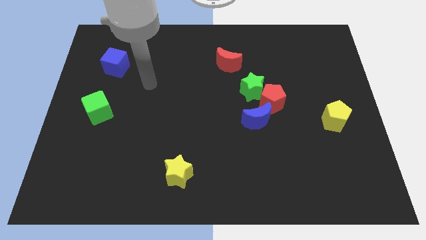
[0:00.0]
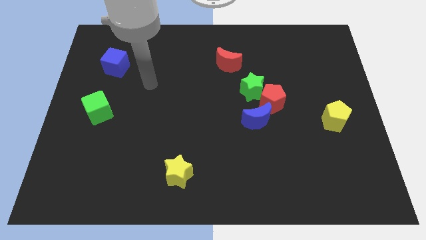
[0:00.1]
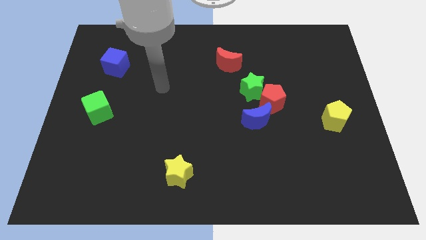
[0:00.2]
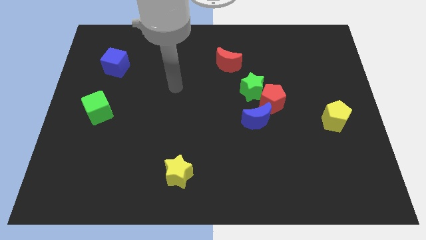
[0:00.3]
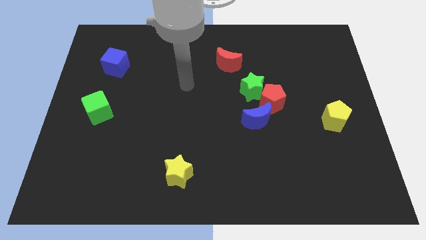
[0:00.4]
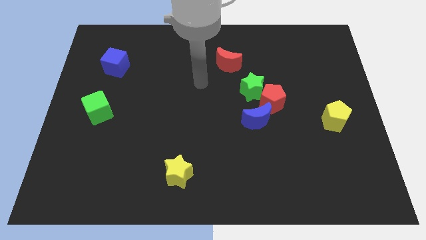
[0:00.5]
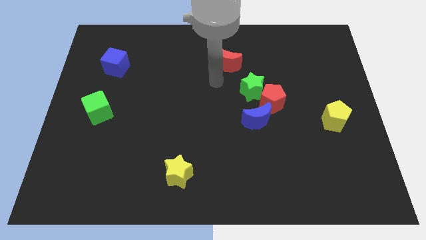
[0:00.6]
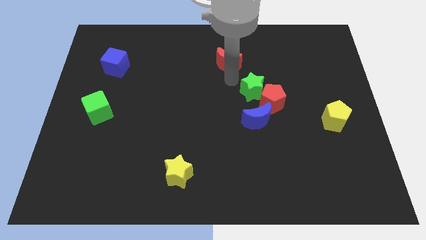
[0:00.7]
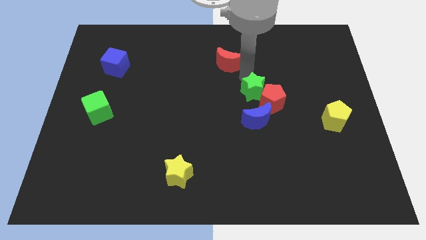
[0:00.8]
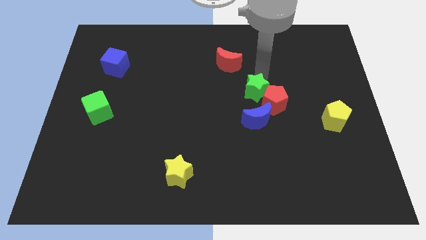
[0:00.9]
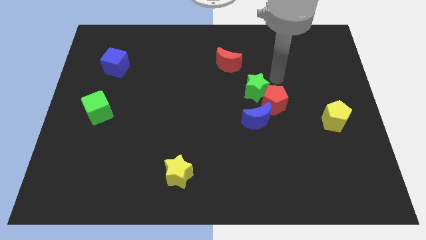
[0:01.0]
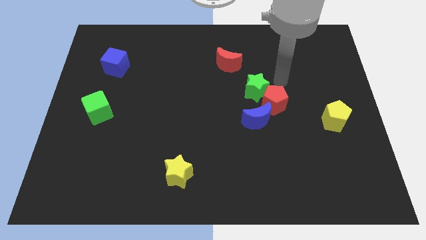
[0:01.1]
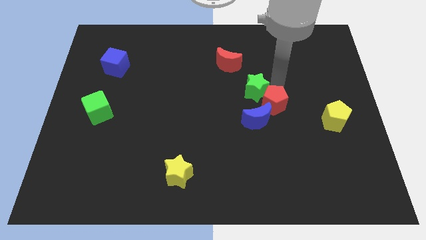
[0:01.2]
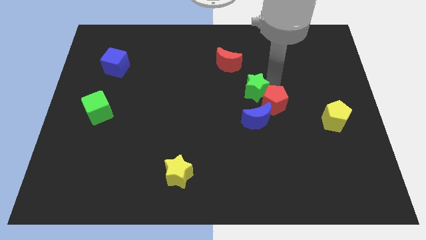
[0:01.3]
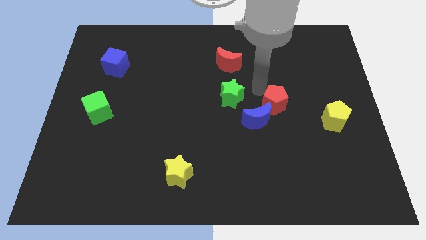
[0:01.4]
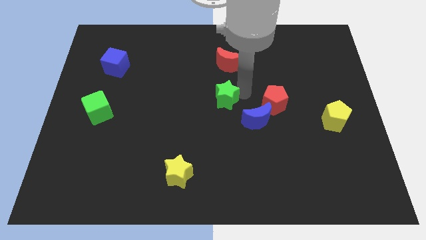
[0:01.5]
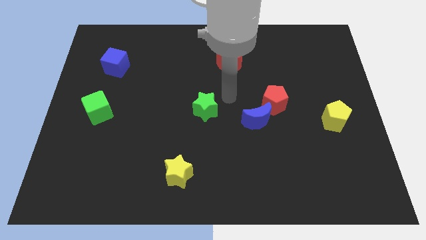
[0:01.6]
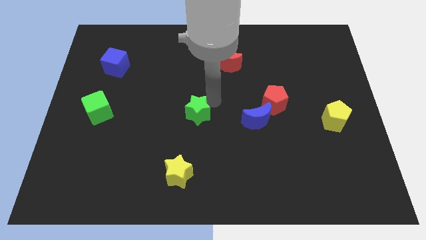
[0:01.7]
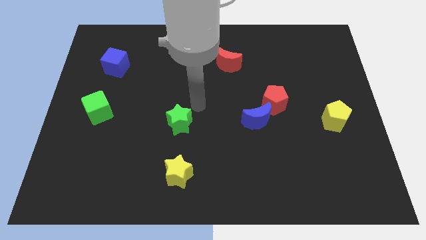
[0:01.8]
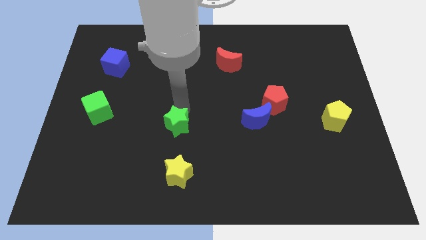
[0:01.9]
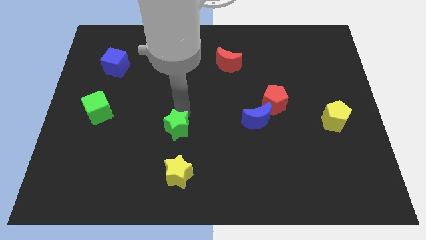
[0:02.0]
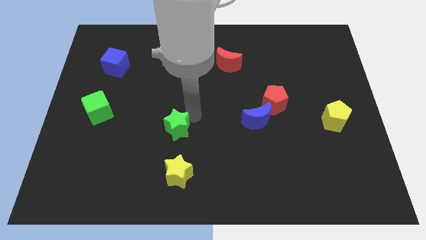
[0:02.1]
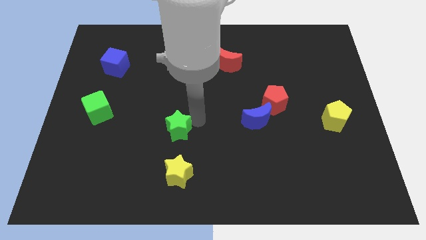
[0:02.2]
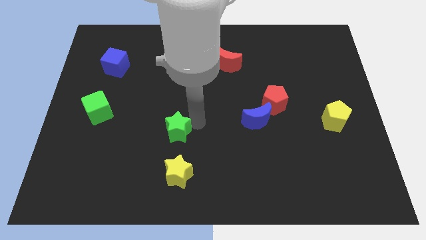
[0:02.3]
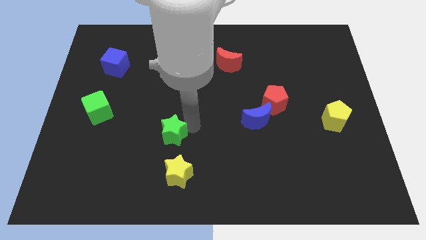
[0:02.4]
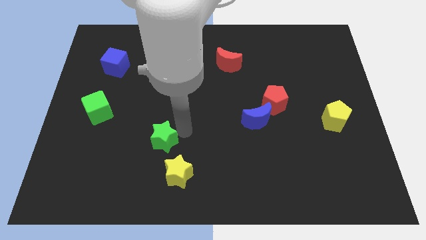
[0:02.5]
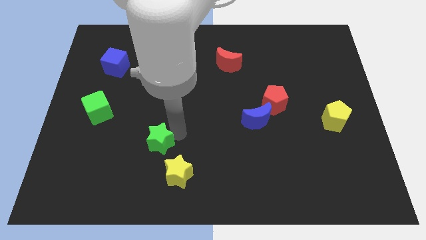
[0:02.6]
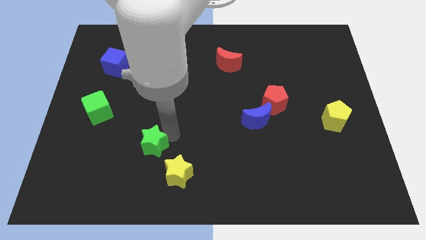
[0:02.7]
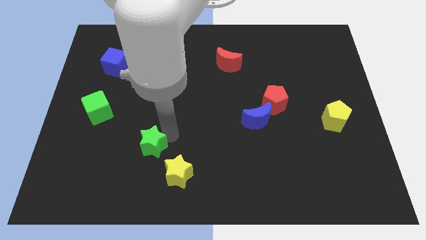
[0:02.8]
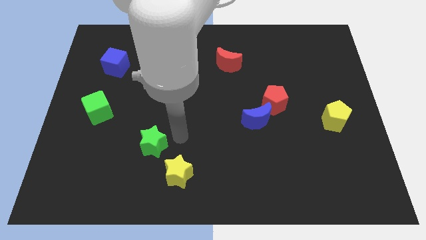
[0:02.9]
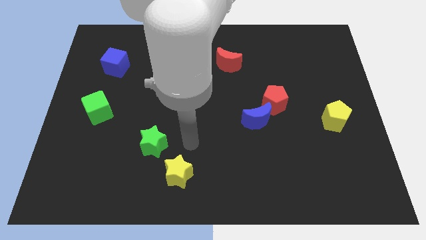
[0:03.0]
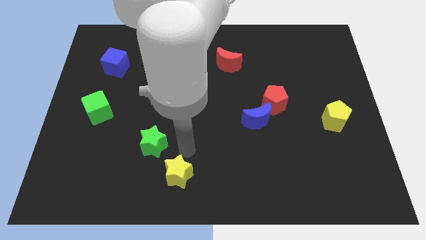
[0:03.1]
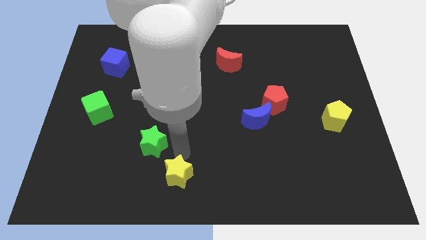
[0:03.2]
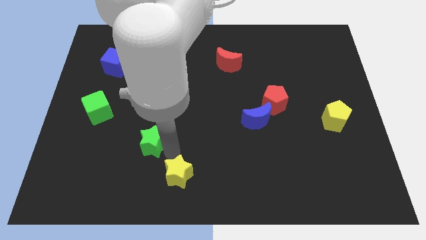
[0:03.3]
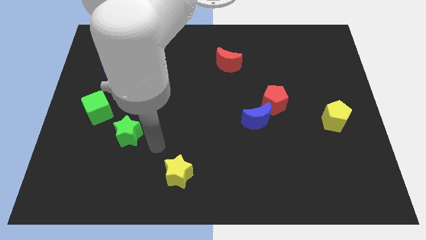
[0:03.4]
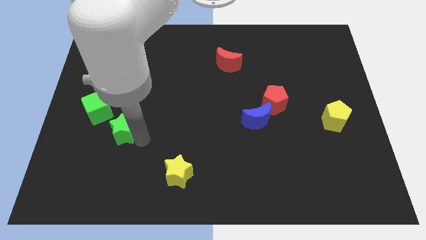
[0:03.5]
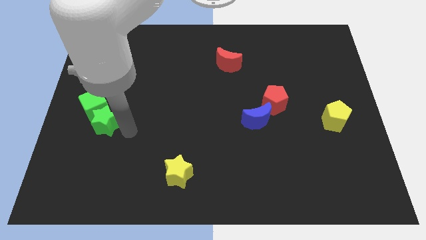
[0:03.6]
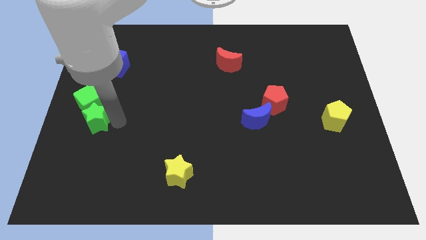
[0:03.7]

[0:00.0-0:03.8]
place the green star below the green cube

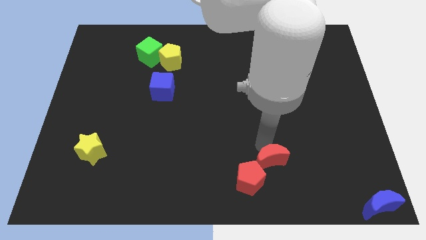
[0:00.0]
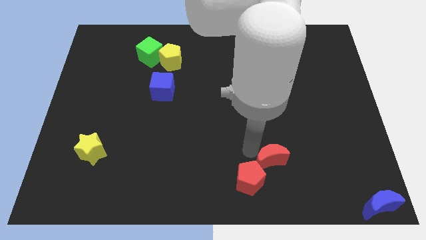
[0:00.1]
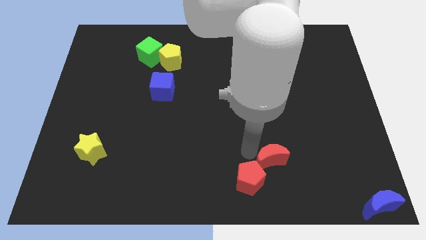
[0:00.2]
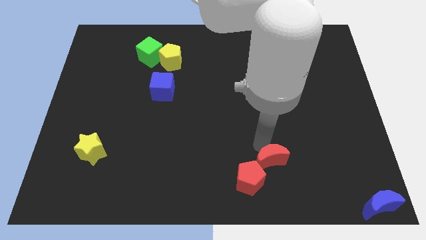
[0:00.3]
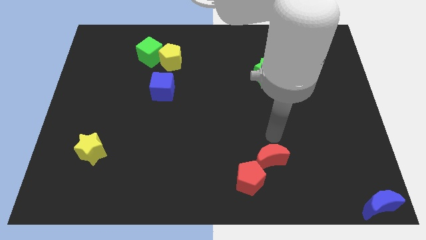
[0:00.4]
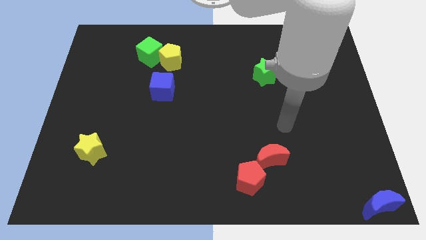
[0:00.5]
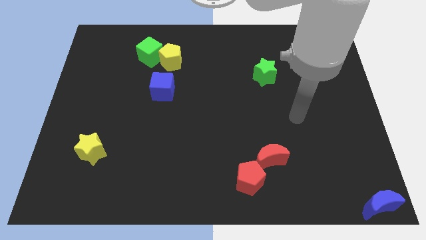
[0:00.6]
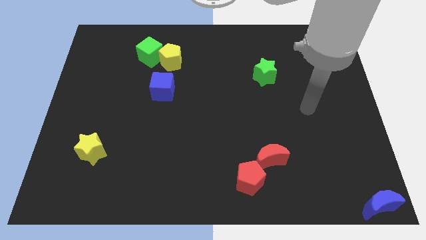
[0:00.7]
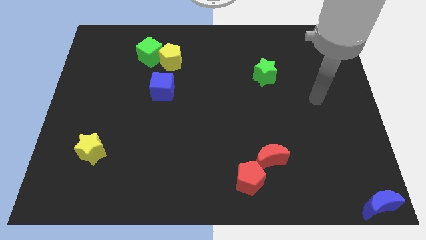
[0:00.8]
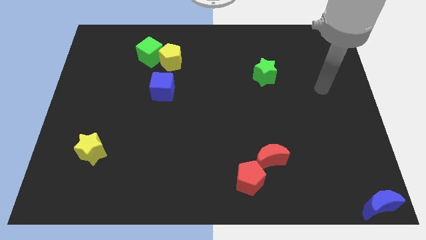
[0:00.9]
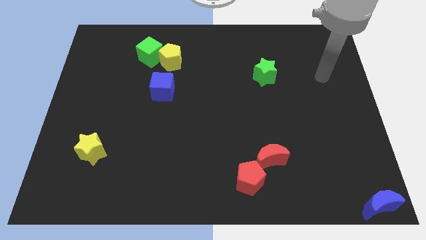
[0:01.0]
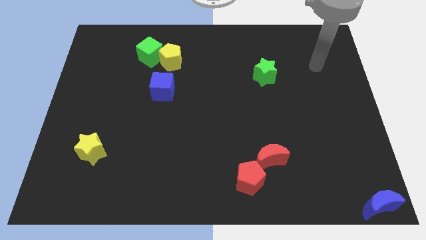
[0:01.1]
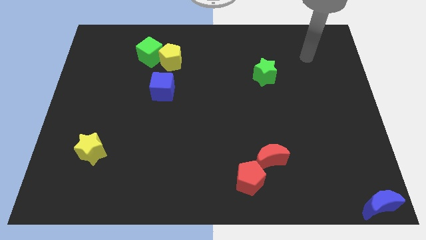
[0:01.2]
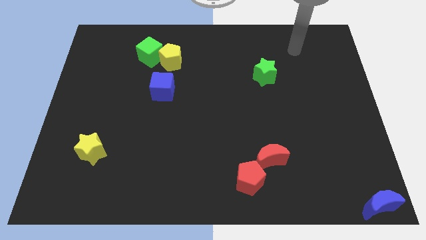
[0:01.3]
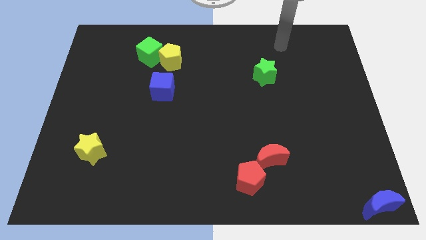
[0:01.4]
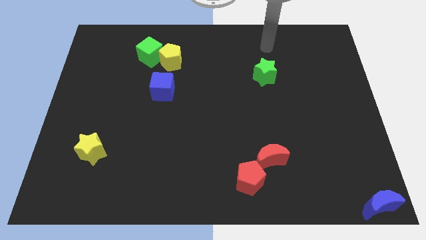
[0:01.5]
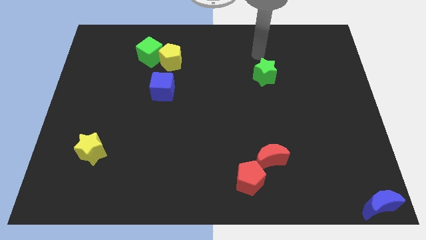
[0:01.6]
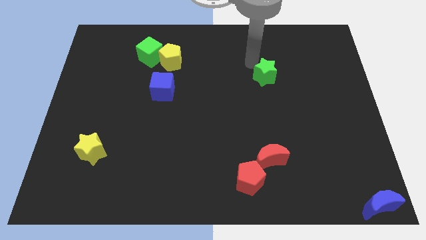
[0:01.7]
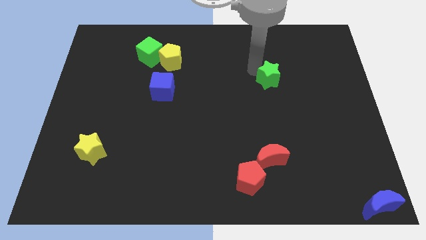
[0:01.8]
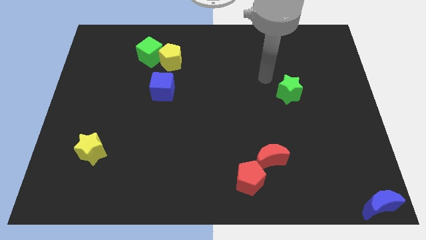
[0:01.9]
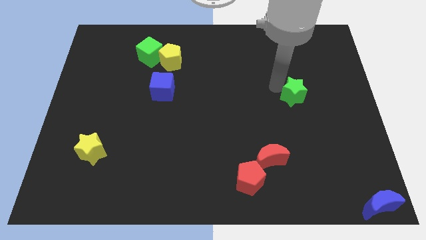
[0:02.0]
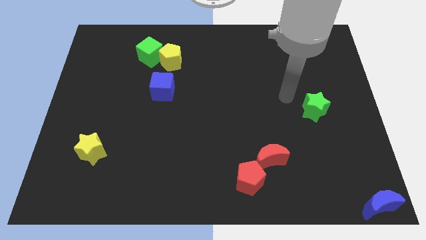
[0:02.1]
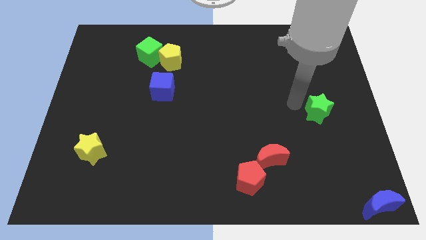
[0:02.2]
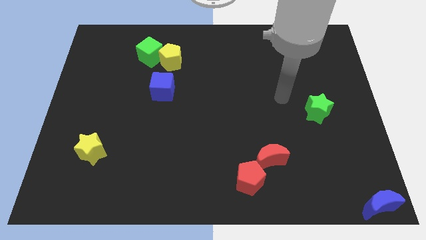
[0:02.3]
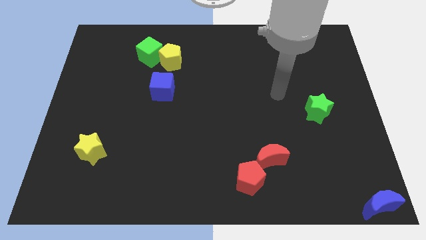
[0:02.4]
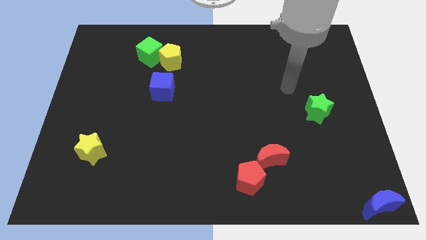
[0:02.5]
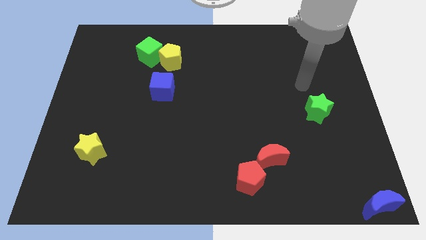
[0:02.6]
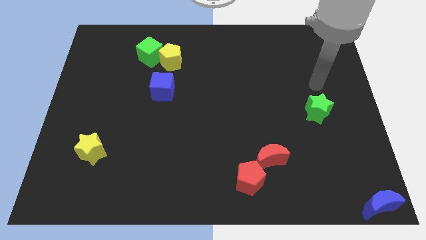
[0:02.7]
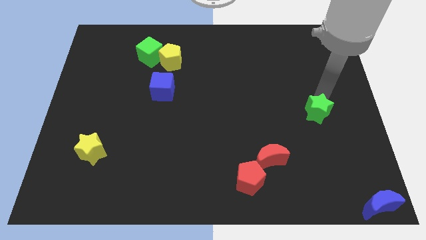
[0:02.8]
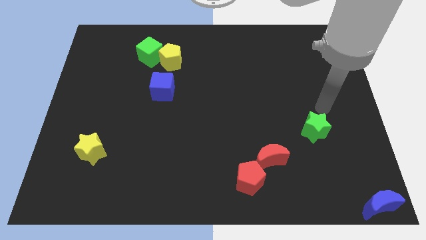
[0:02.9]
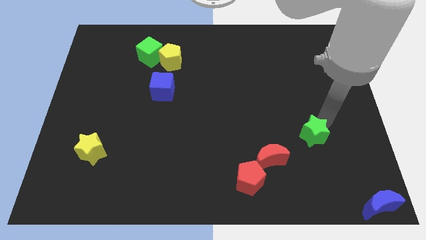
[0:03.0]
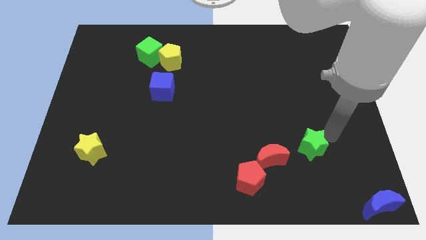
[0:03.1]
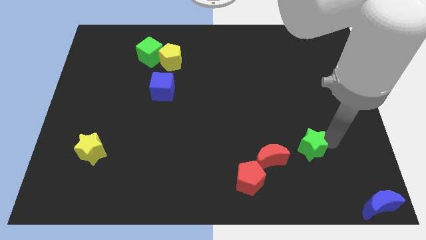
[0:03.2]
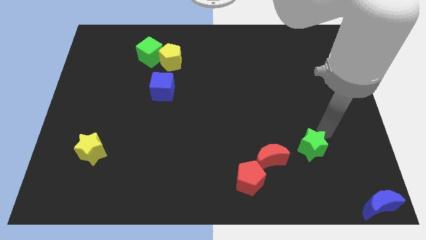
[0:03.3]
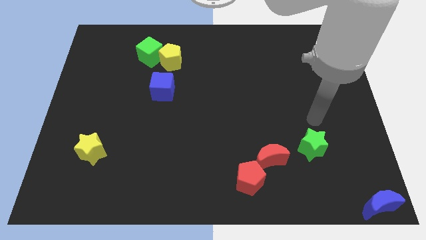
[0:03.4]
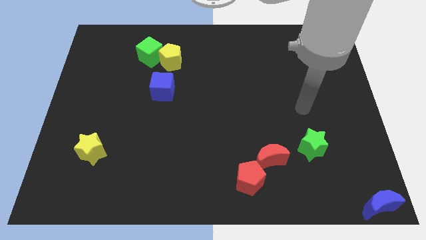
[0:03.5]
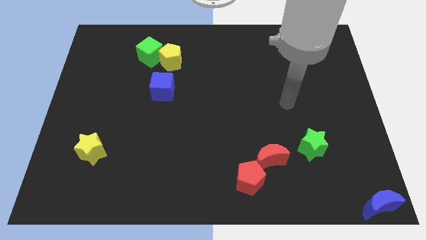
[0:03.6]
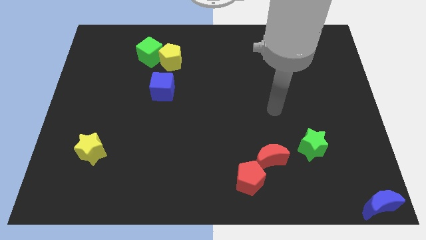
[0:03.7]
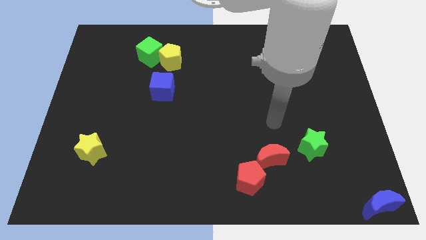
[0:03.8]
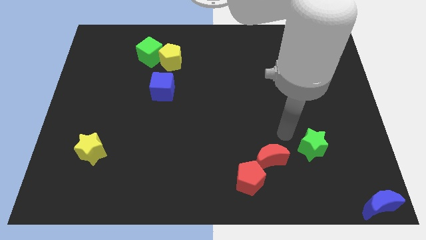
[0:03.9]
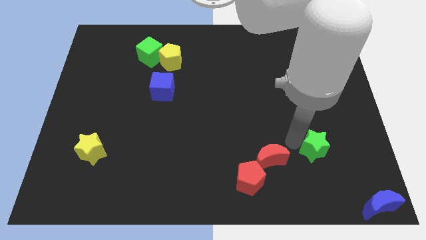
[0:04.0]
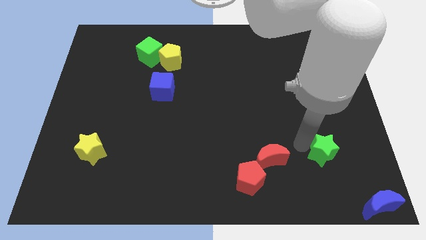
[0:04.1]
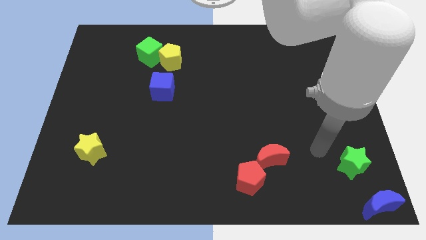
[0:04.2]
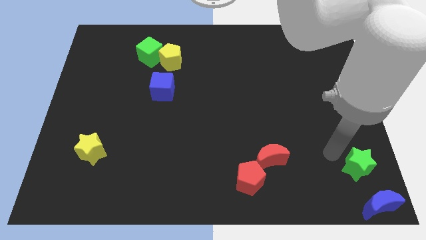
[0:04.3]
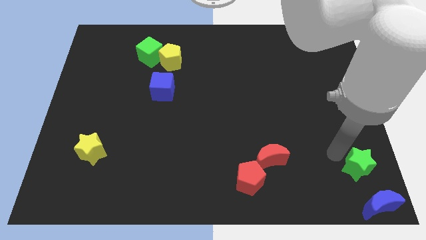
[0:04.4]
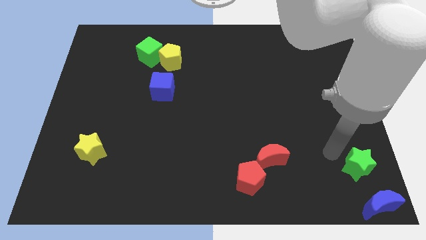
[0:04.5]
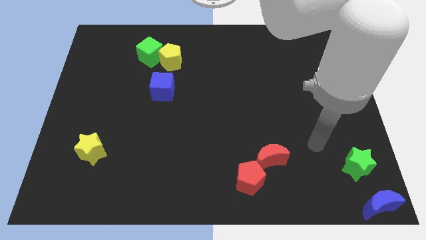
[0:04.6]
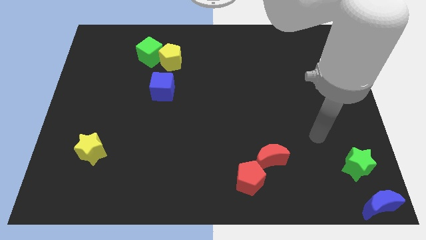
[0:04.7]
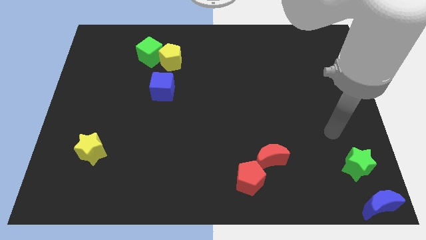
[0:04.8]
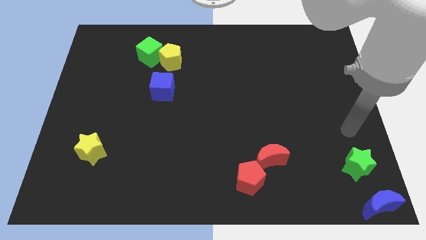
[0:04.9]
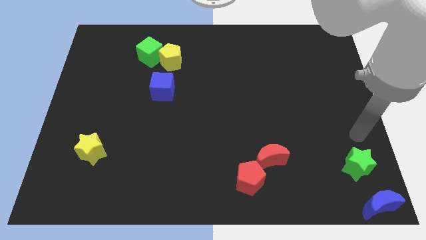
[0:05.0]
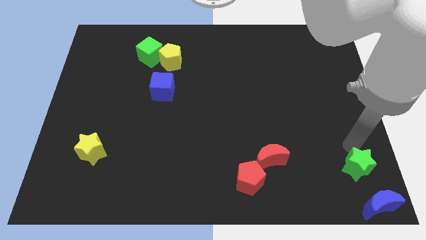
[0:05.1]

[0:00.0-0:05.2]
drag the green star towards the blue moon
